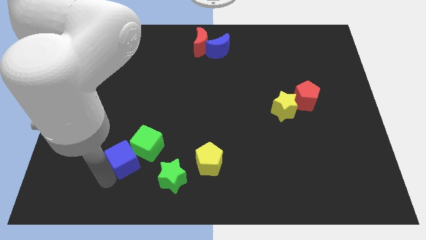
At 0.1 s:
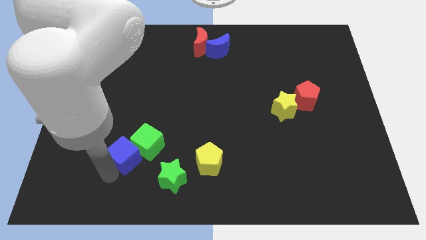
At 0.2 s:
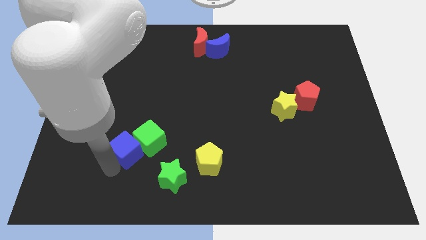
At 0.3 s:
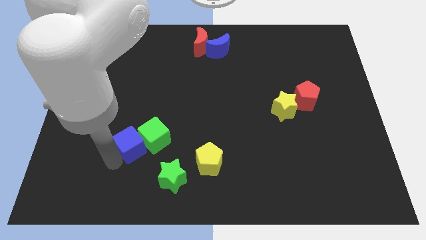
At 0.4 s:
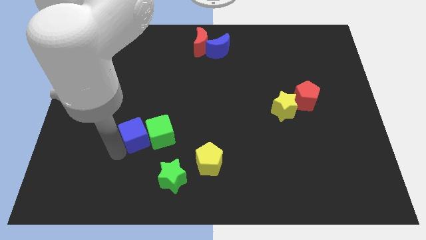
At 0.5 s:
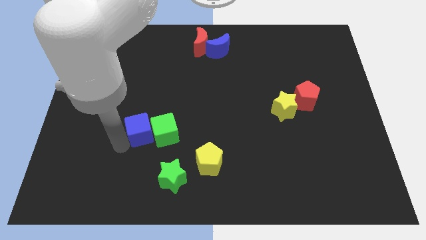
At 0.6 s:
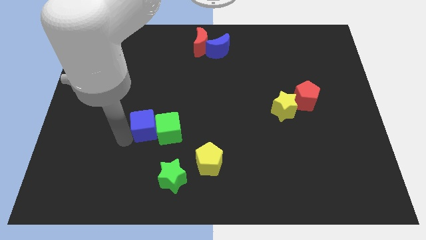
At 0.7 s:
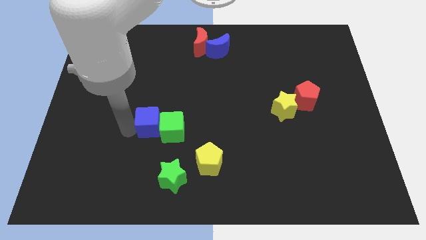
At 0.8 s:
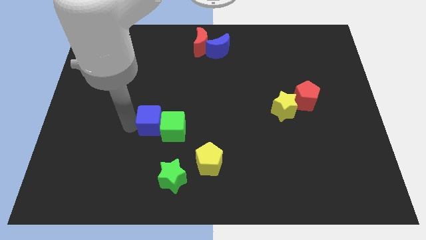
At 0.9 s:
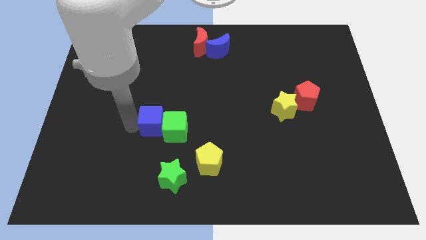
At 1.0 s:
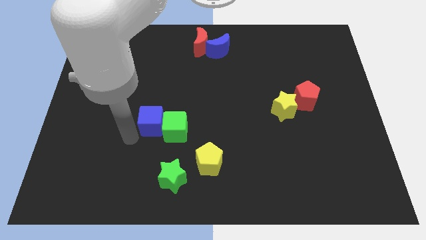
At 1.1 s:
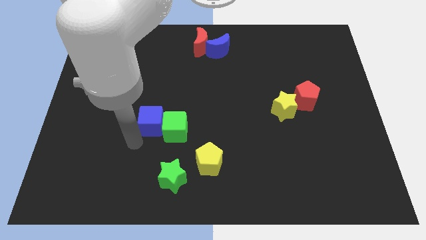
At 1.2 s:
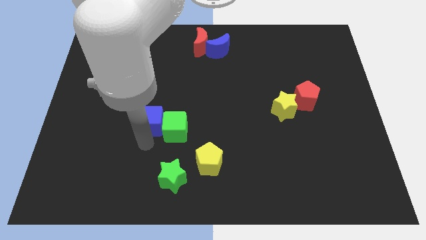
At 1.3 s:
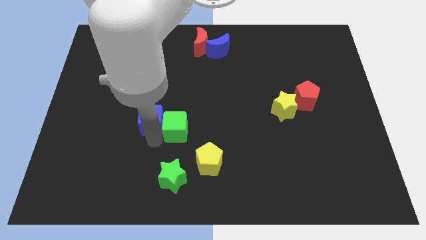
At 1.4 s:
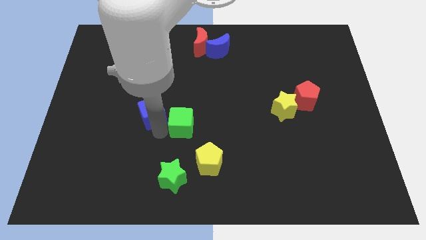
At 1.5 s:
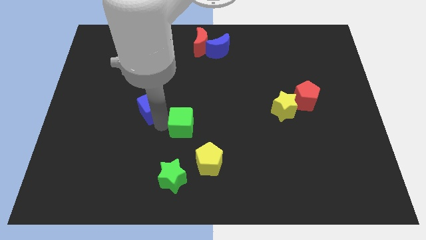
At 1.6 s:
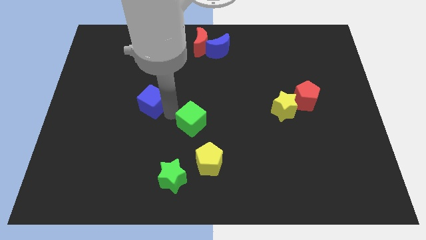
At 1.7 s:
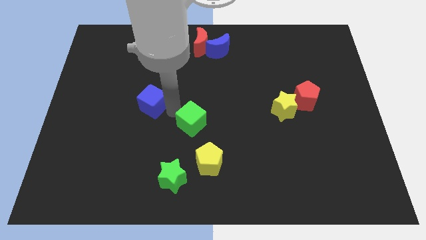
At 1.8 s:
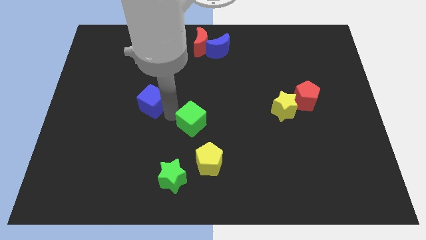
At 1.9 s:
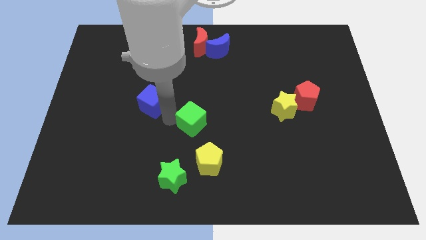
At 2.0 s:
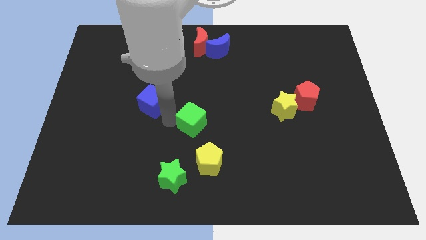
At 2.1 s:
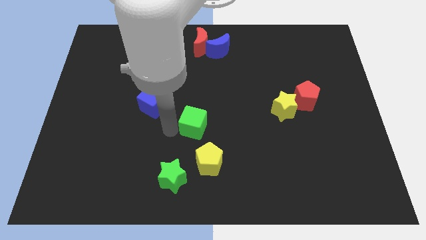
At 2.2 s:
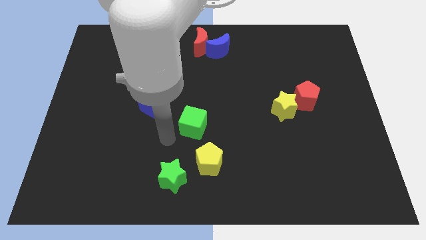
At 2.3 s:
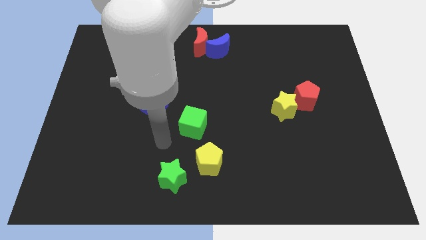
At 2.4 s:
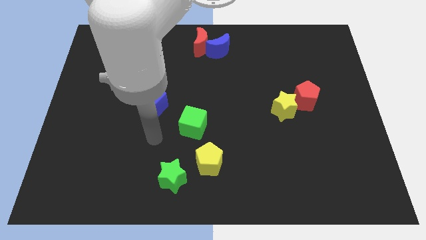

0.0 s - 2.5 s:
seperate blue cube and green cube

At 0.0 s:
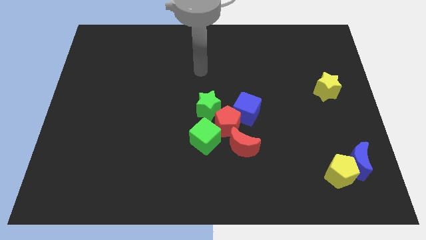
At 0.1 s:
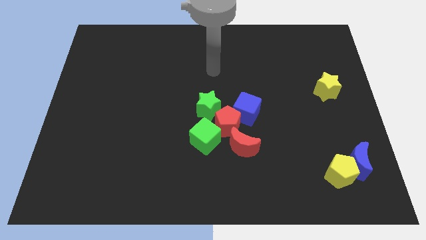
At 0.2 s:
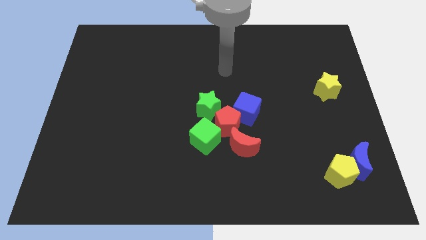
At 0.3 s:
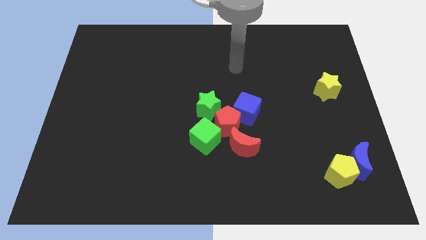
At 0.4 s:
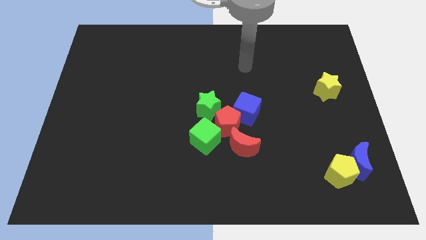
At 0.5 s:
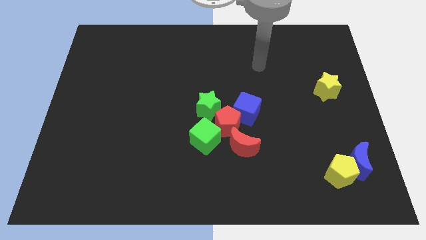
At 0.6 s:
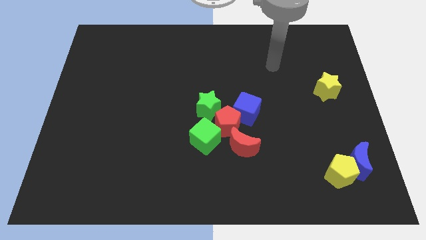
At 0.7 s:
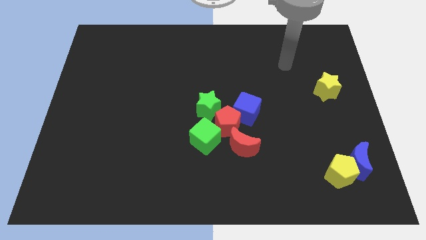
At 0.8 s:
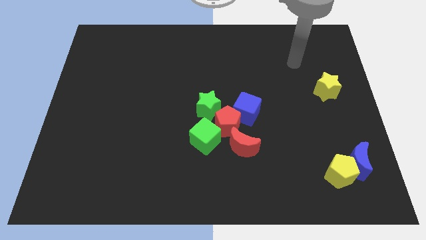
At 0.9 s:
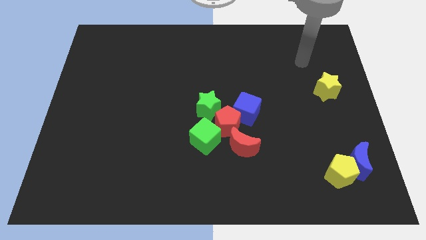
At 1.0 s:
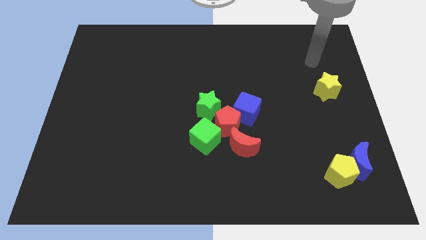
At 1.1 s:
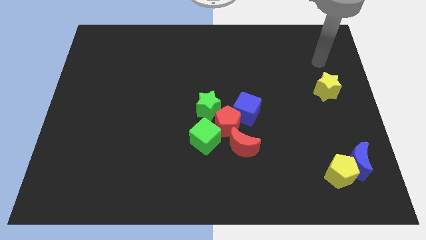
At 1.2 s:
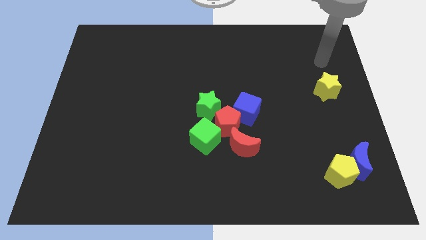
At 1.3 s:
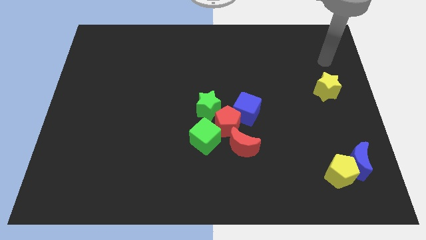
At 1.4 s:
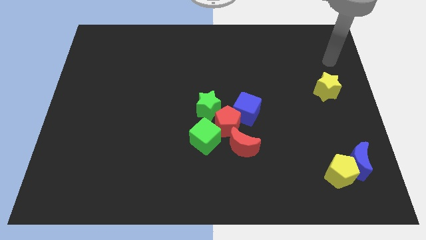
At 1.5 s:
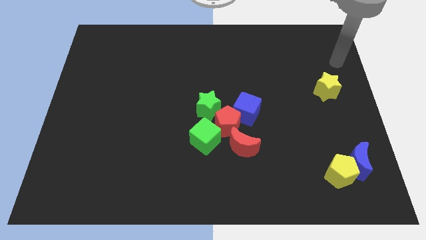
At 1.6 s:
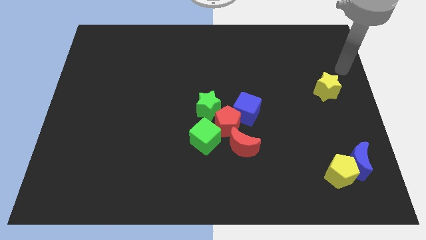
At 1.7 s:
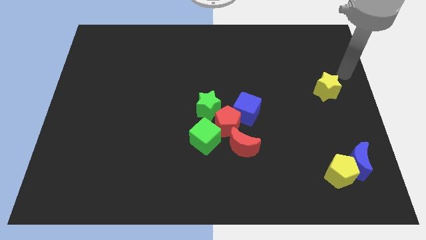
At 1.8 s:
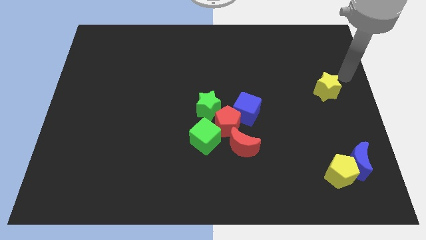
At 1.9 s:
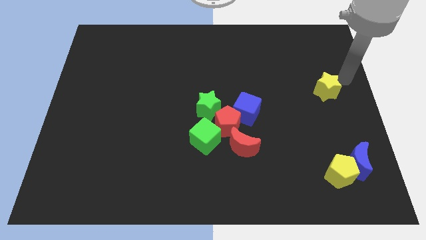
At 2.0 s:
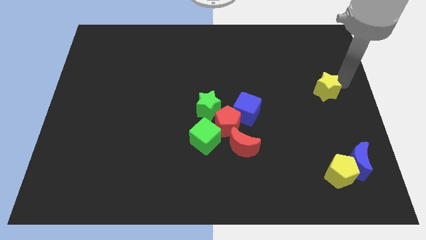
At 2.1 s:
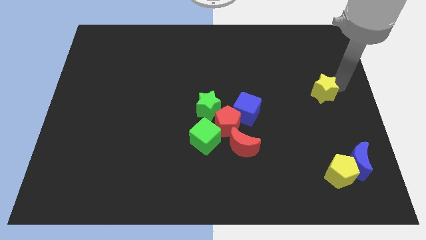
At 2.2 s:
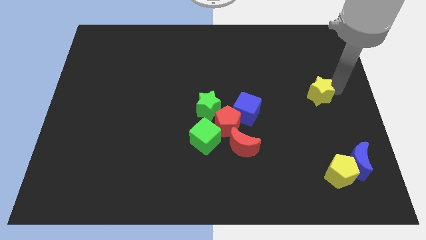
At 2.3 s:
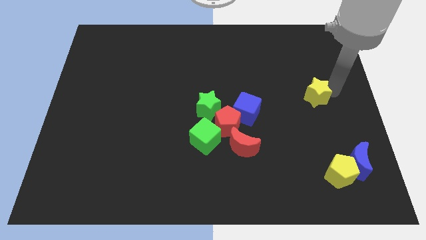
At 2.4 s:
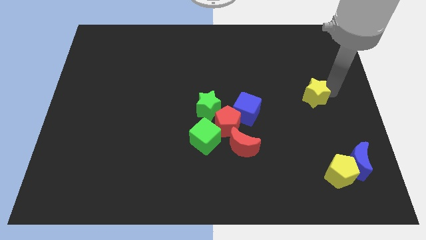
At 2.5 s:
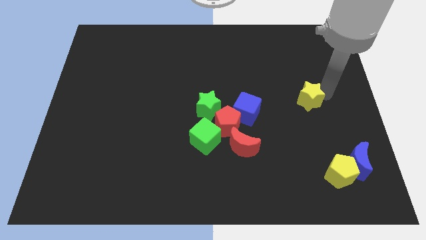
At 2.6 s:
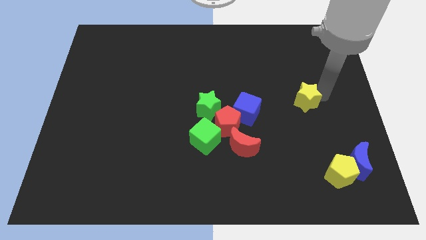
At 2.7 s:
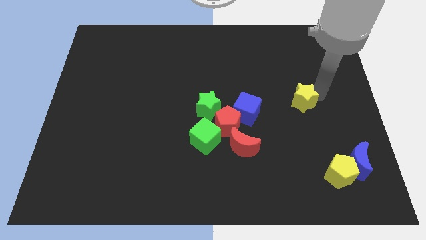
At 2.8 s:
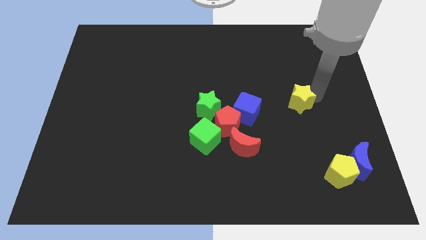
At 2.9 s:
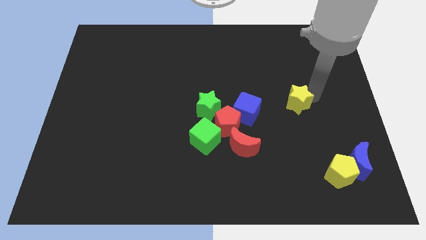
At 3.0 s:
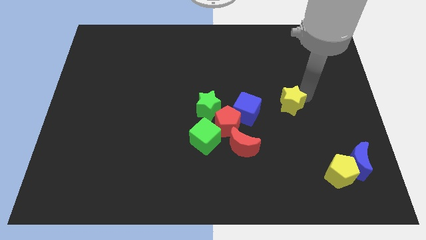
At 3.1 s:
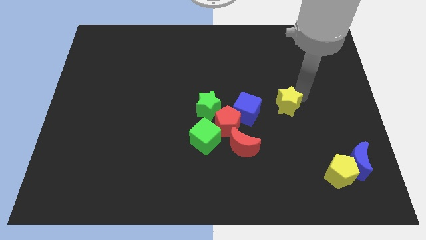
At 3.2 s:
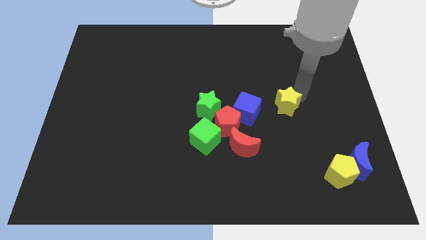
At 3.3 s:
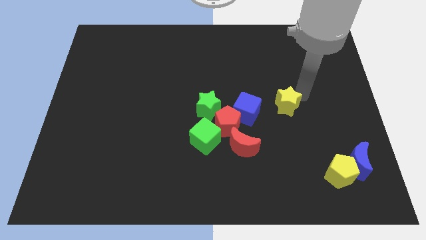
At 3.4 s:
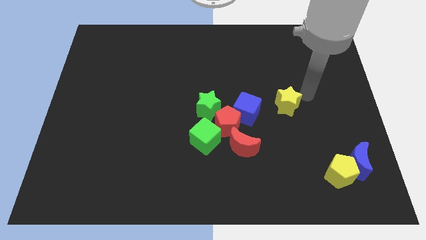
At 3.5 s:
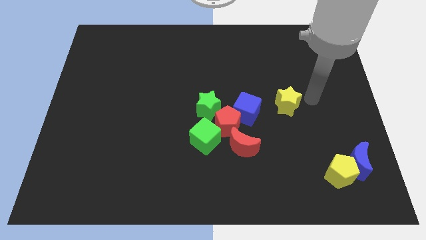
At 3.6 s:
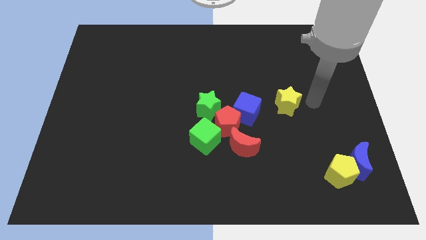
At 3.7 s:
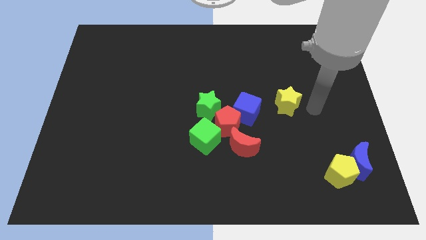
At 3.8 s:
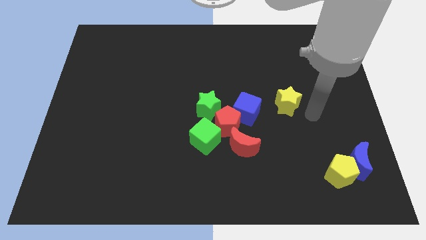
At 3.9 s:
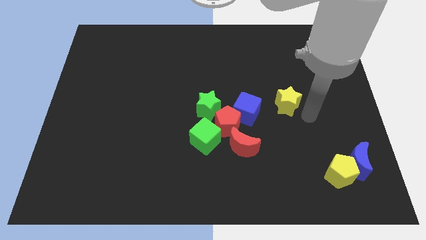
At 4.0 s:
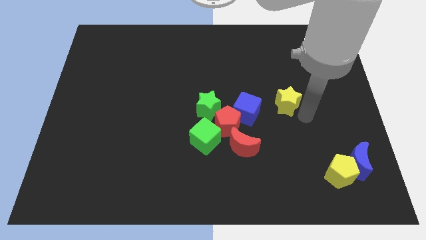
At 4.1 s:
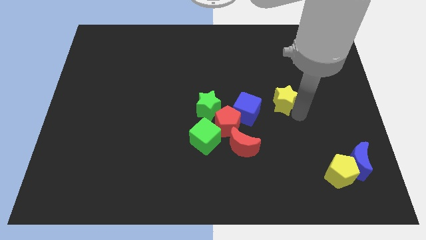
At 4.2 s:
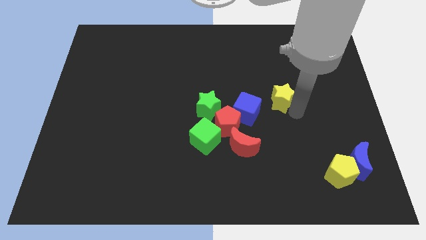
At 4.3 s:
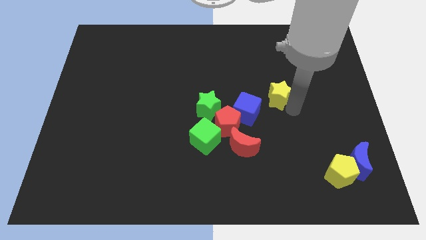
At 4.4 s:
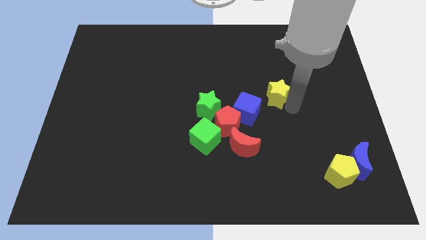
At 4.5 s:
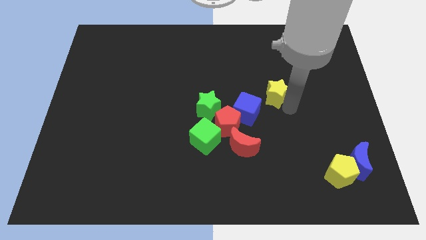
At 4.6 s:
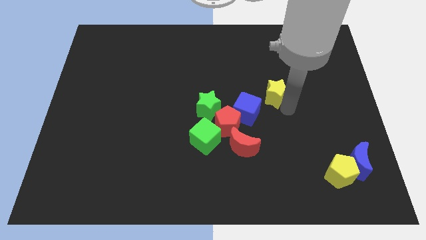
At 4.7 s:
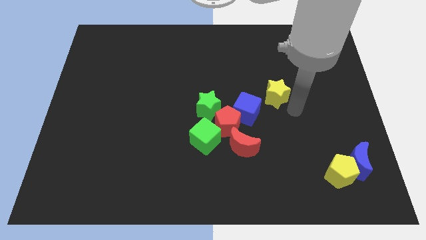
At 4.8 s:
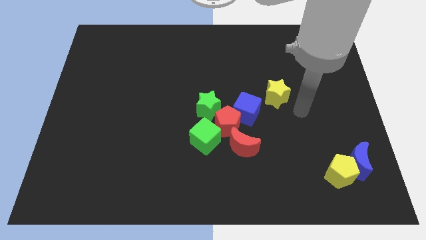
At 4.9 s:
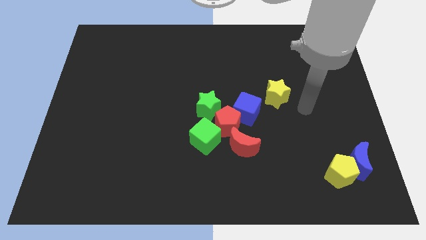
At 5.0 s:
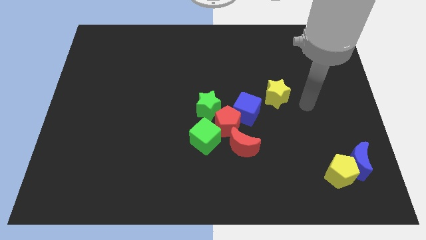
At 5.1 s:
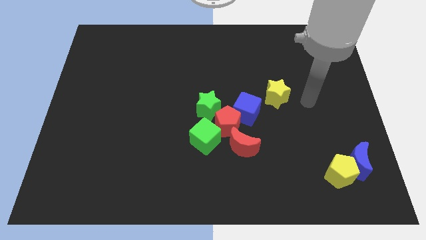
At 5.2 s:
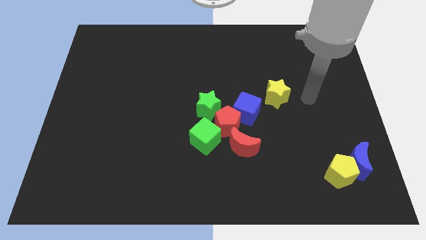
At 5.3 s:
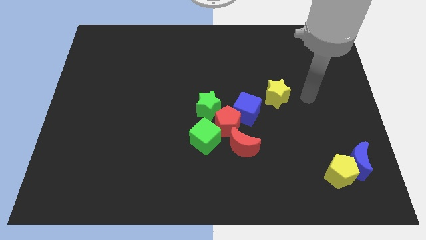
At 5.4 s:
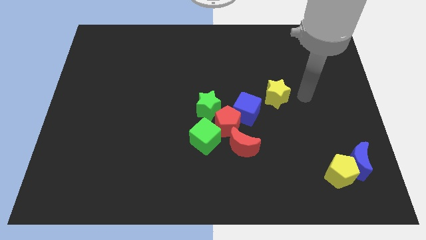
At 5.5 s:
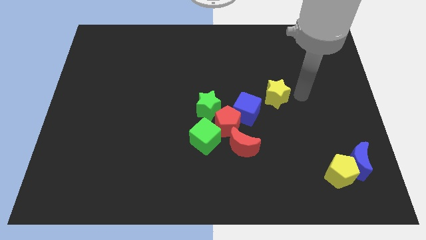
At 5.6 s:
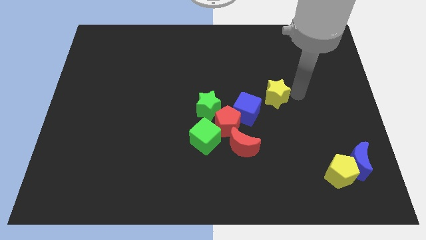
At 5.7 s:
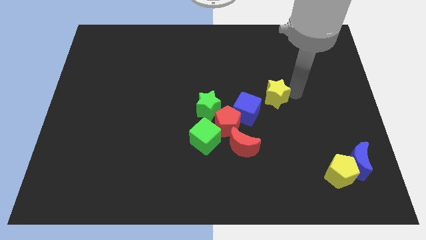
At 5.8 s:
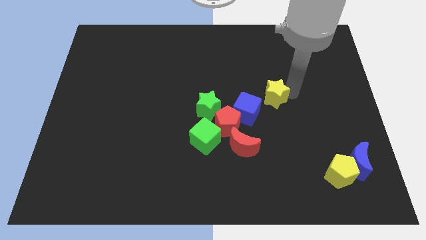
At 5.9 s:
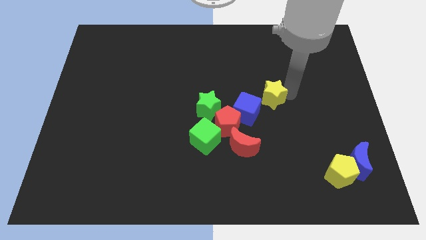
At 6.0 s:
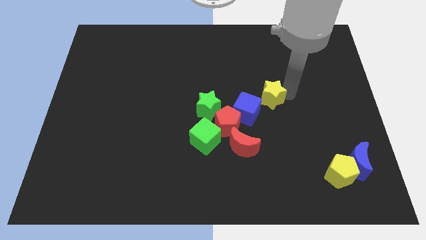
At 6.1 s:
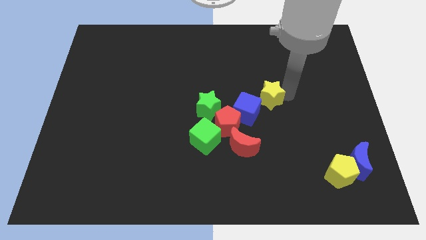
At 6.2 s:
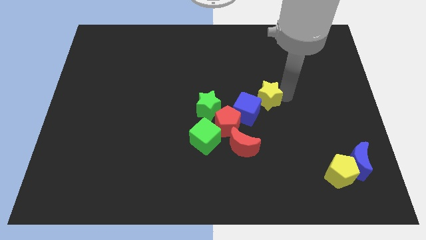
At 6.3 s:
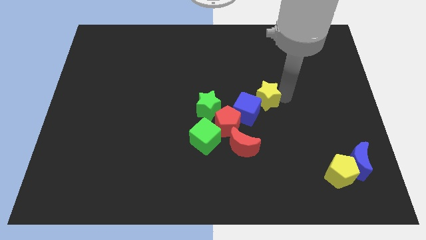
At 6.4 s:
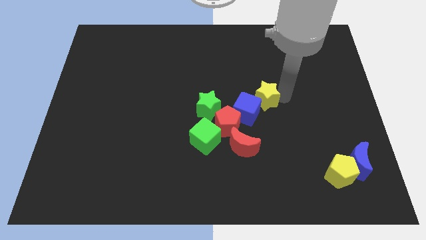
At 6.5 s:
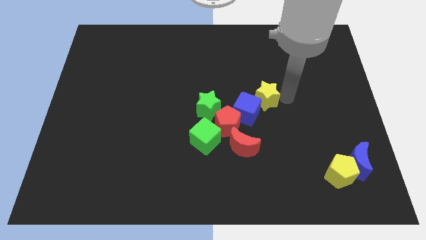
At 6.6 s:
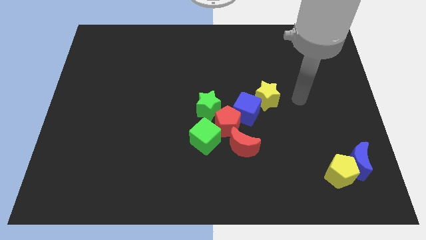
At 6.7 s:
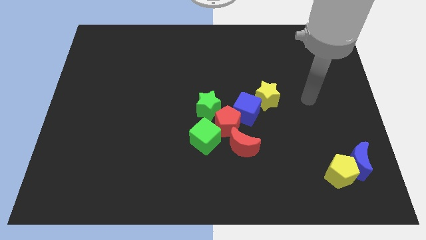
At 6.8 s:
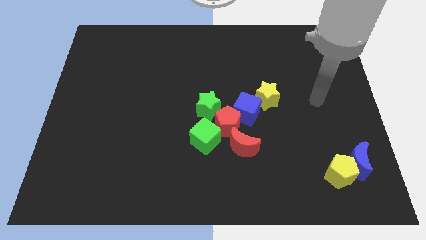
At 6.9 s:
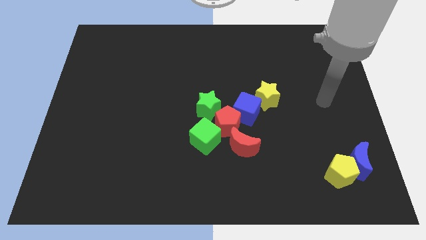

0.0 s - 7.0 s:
push the yellow star to the top right of the blue cube
